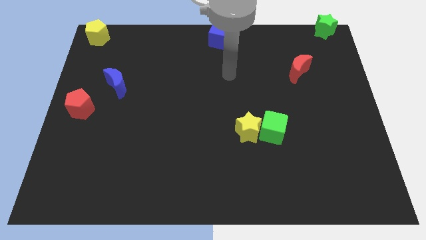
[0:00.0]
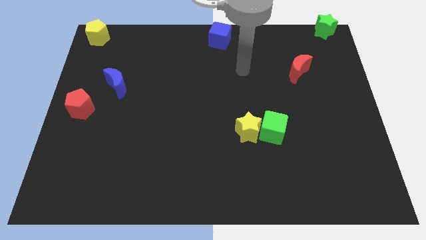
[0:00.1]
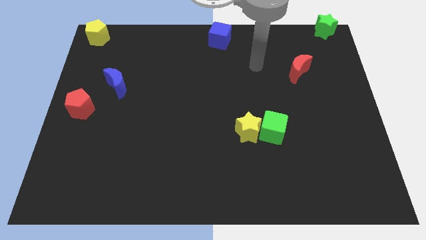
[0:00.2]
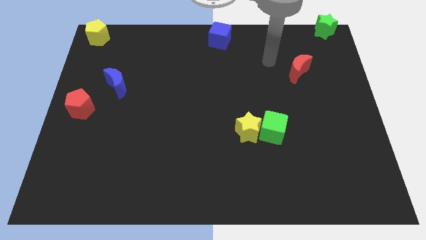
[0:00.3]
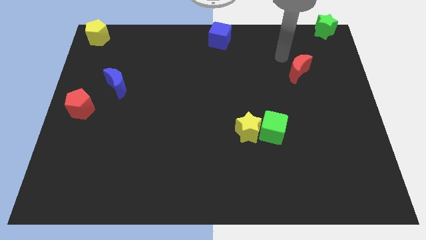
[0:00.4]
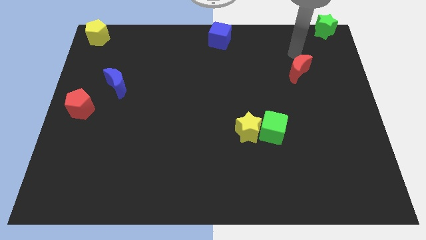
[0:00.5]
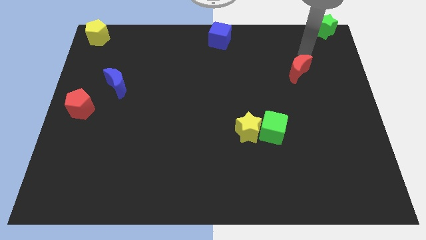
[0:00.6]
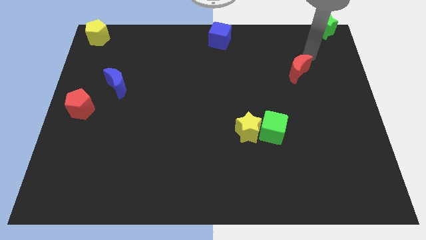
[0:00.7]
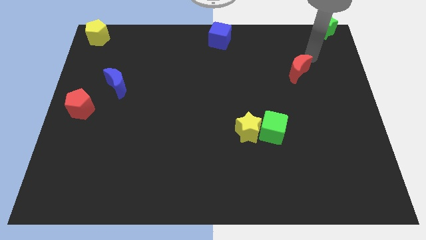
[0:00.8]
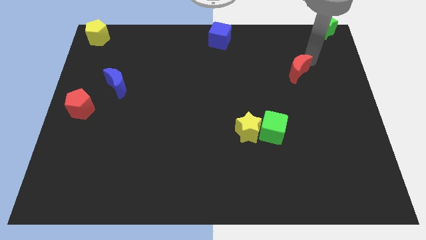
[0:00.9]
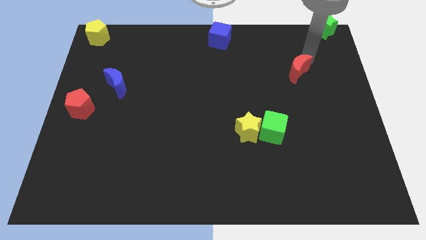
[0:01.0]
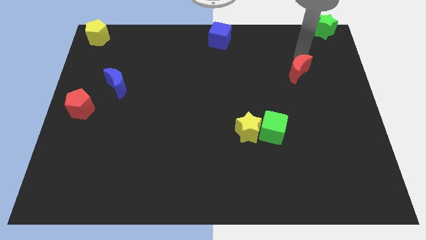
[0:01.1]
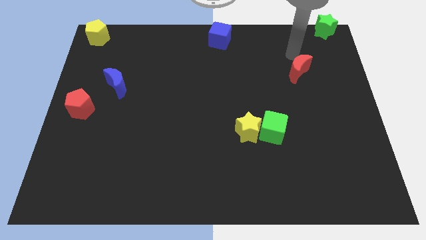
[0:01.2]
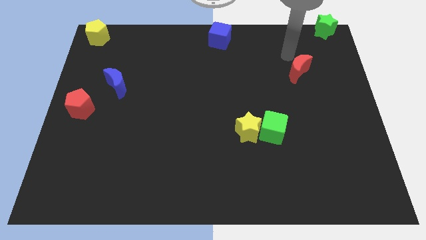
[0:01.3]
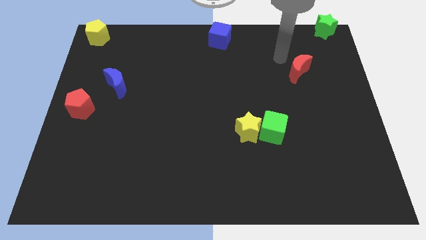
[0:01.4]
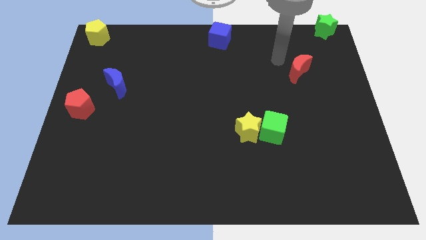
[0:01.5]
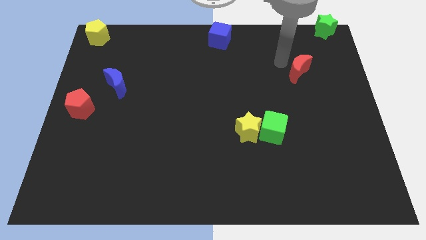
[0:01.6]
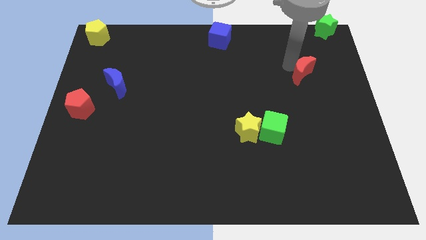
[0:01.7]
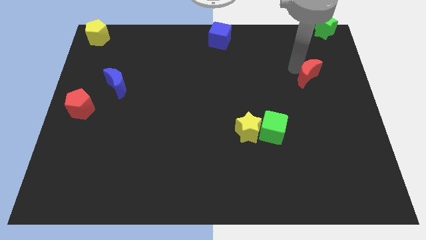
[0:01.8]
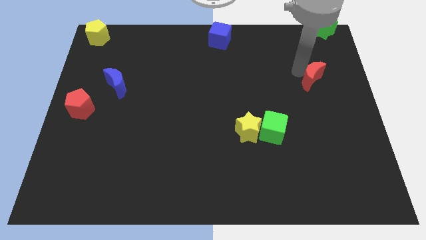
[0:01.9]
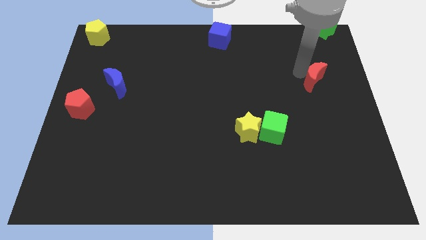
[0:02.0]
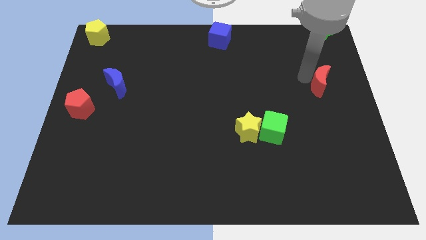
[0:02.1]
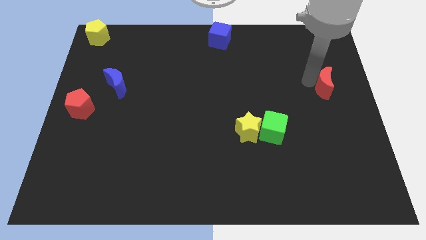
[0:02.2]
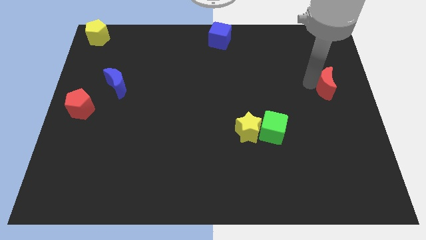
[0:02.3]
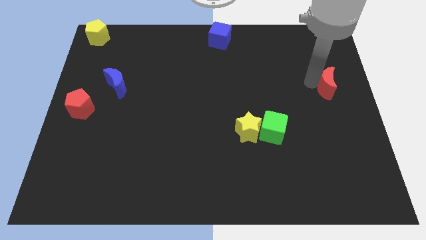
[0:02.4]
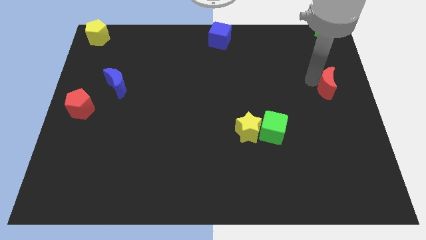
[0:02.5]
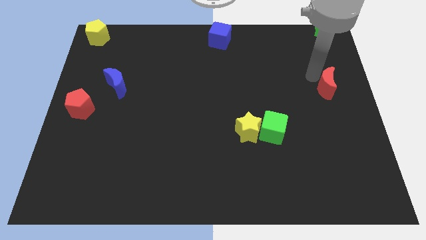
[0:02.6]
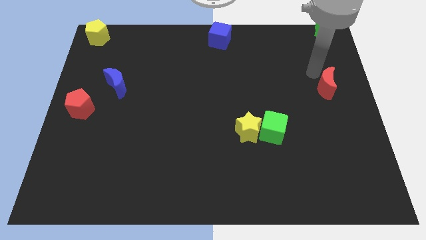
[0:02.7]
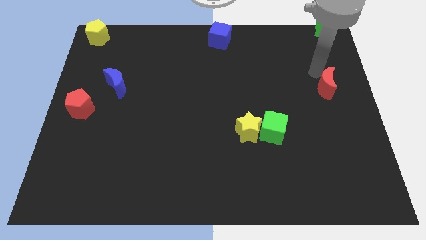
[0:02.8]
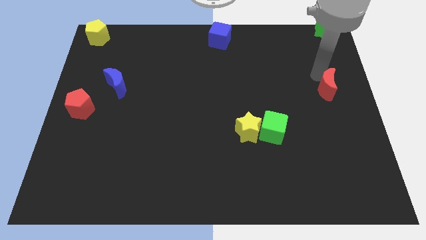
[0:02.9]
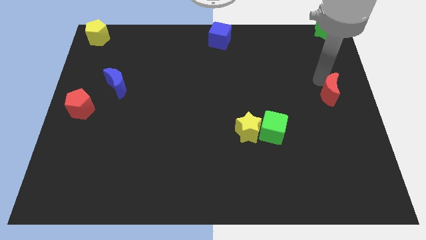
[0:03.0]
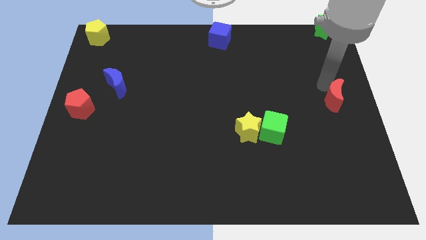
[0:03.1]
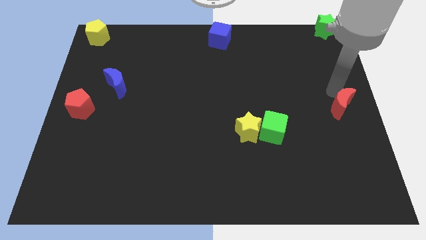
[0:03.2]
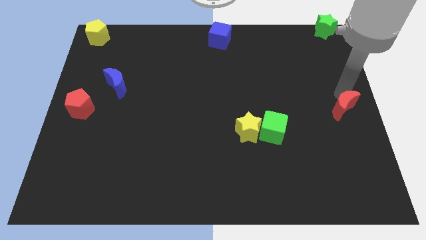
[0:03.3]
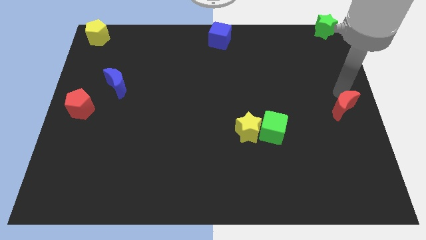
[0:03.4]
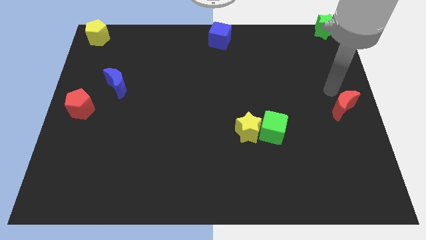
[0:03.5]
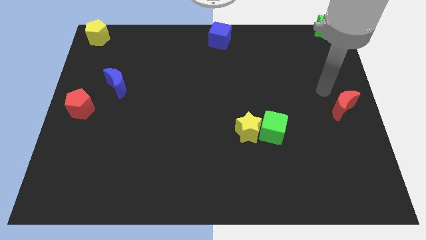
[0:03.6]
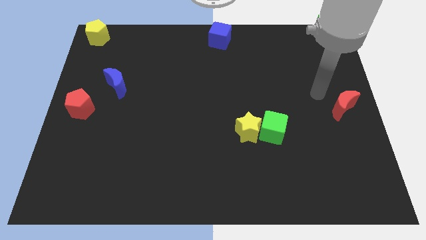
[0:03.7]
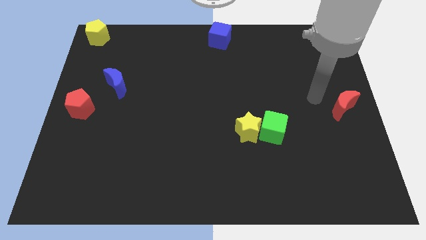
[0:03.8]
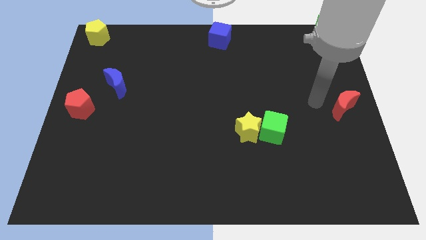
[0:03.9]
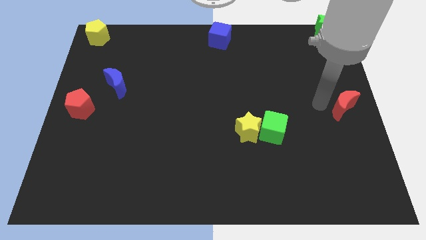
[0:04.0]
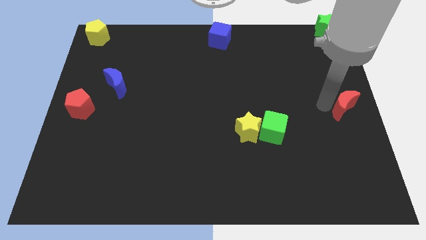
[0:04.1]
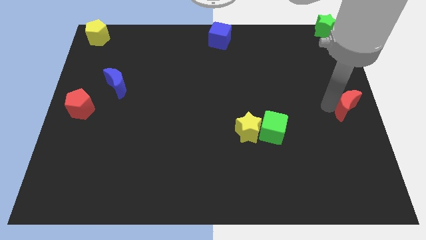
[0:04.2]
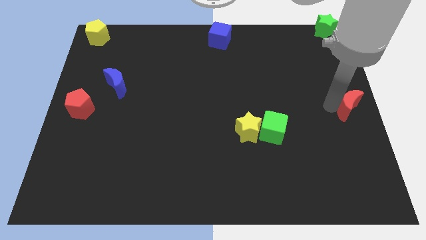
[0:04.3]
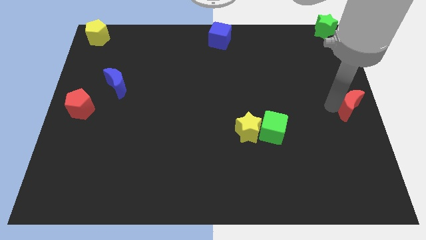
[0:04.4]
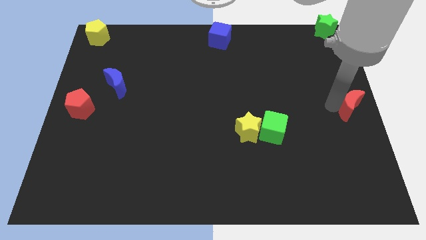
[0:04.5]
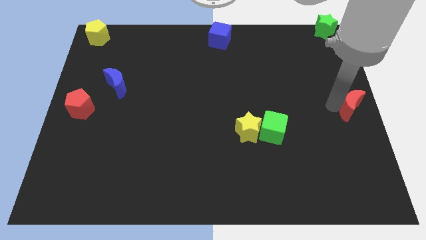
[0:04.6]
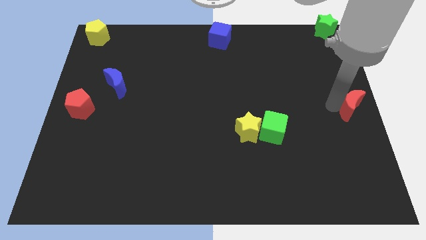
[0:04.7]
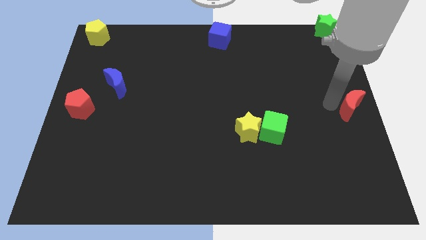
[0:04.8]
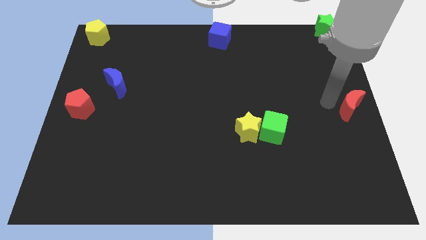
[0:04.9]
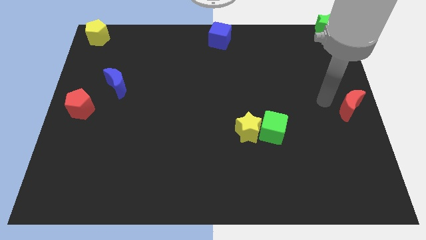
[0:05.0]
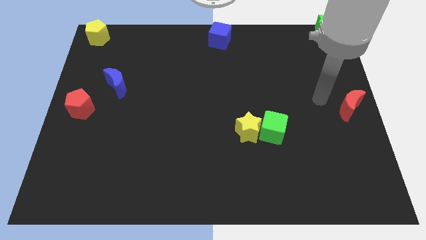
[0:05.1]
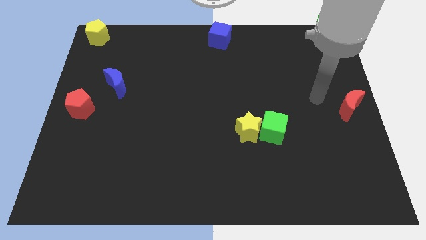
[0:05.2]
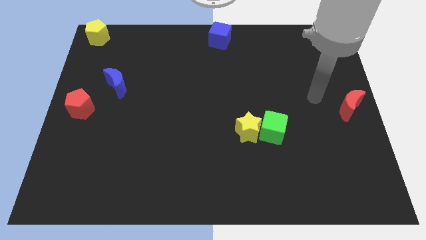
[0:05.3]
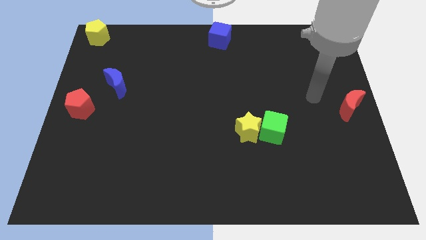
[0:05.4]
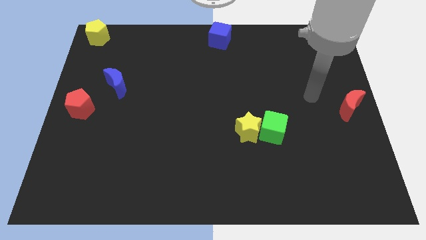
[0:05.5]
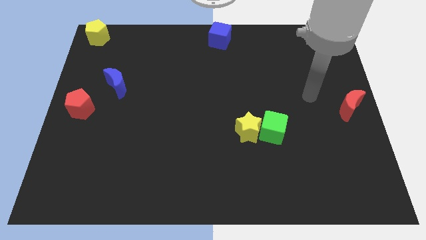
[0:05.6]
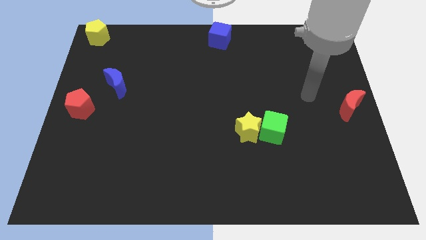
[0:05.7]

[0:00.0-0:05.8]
push red crescent towards the left center of the board

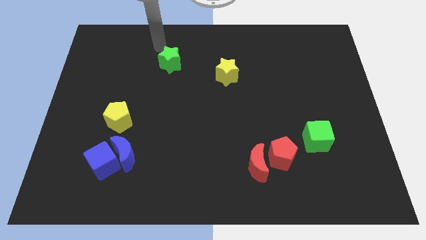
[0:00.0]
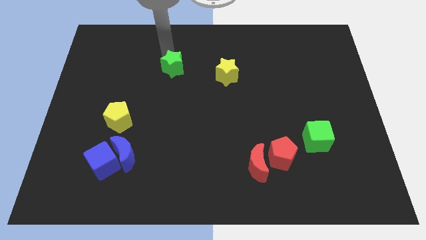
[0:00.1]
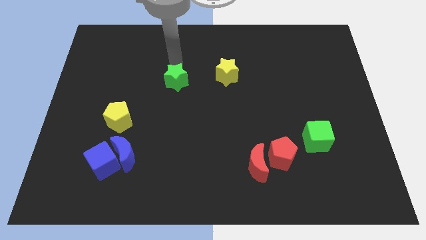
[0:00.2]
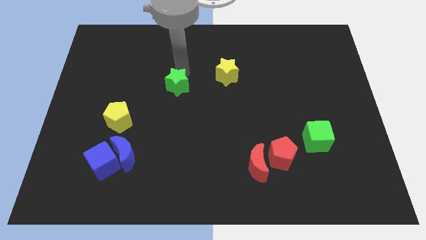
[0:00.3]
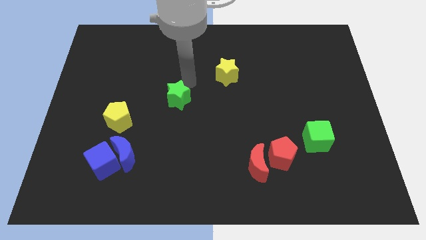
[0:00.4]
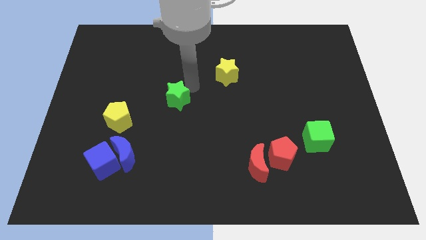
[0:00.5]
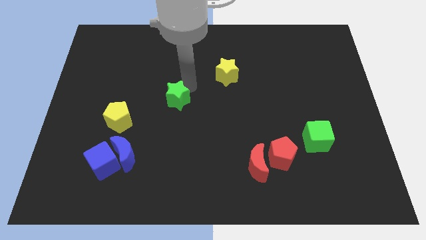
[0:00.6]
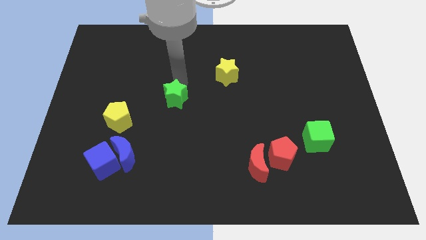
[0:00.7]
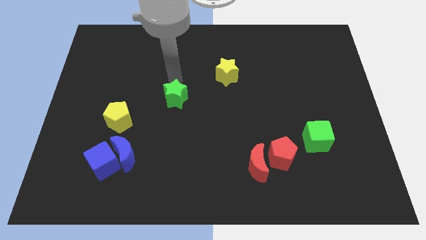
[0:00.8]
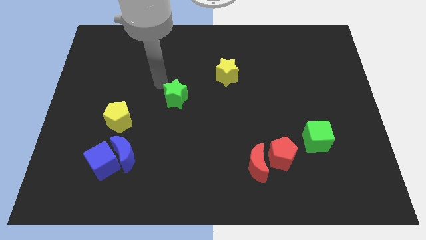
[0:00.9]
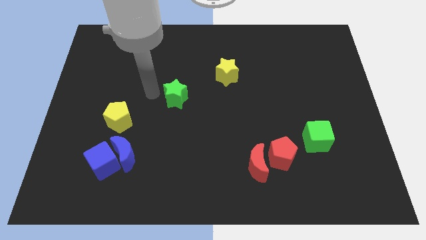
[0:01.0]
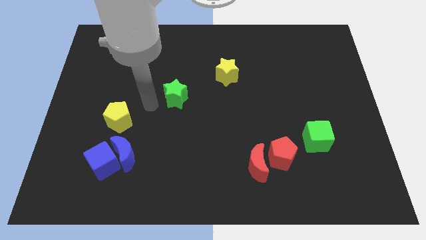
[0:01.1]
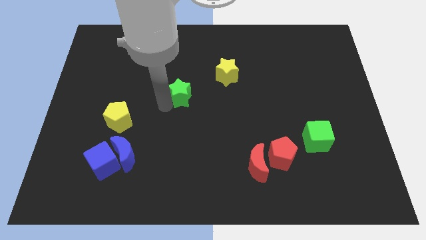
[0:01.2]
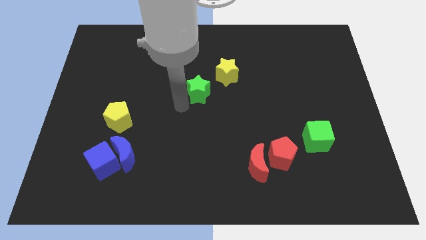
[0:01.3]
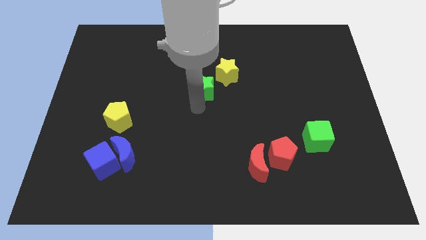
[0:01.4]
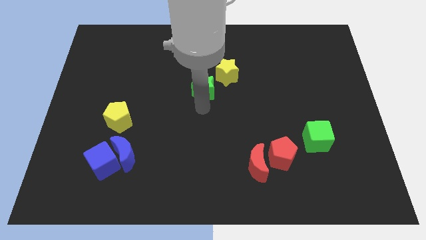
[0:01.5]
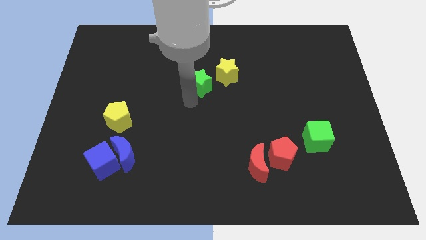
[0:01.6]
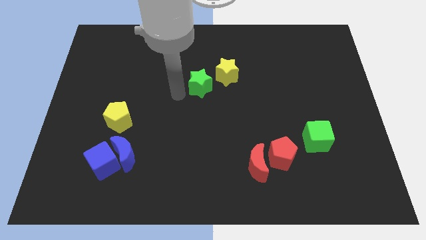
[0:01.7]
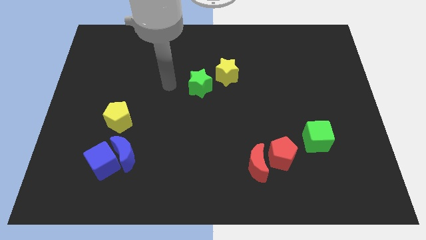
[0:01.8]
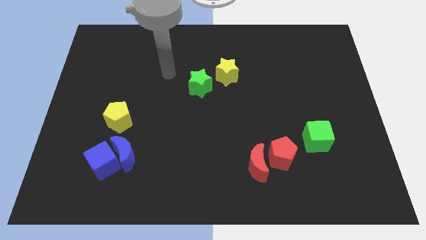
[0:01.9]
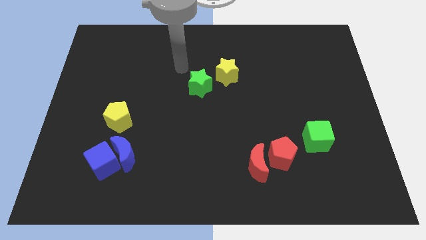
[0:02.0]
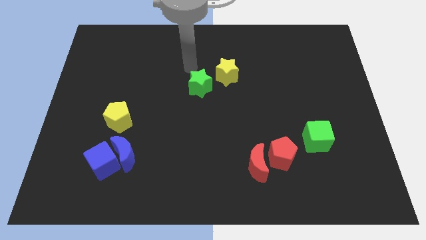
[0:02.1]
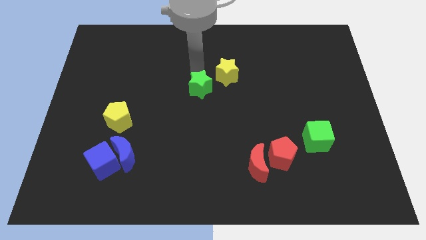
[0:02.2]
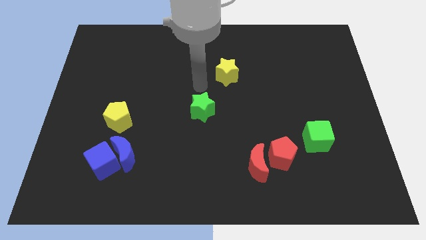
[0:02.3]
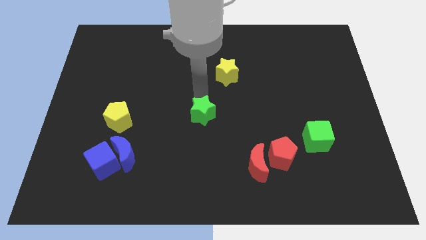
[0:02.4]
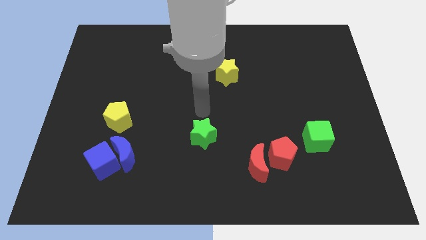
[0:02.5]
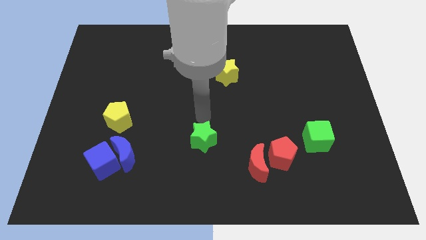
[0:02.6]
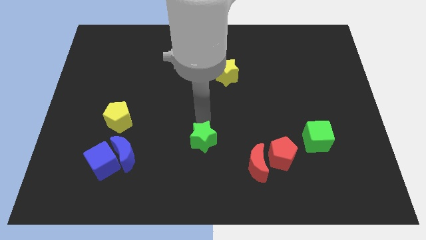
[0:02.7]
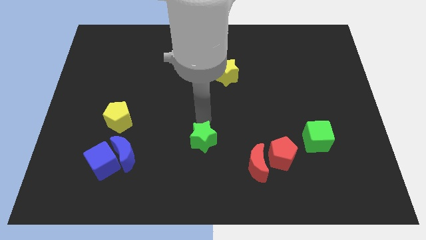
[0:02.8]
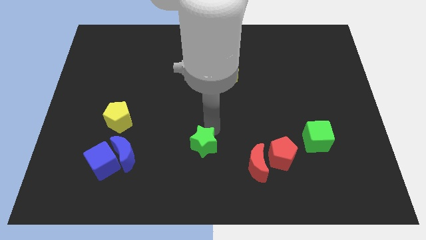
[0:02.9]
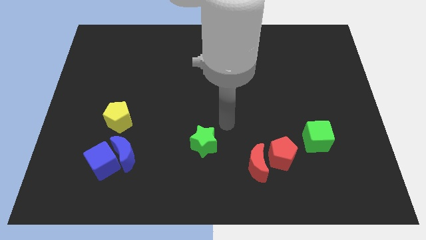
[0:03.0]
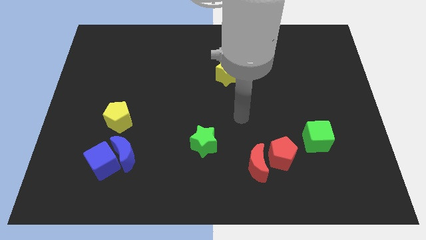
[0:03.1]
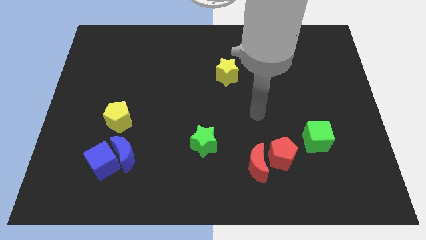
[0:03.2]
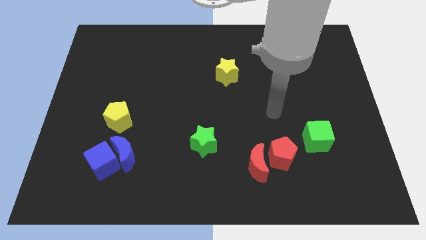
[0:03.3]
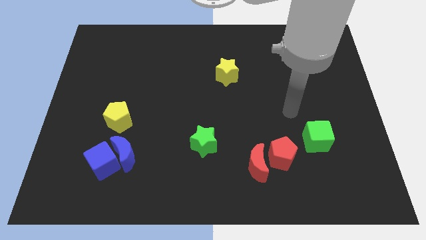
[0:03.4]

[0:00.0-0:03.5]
push the green star towards down bottom of the board
